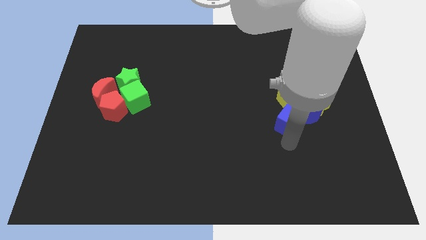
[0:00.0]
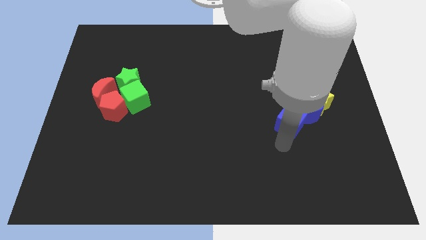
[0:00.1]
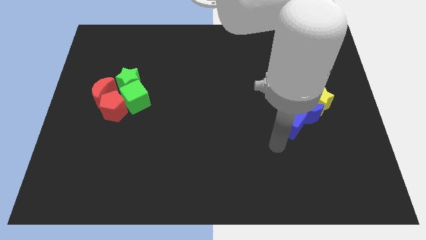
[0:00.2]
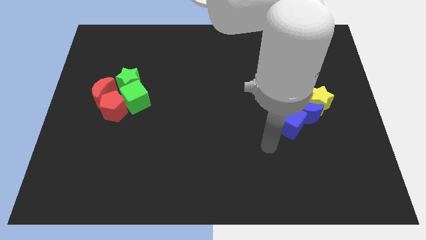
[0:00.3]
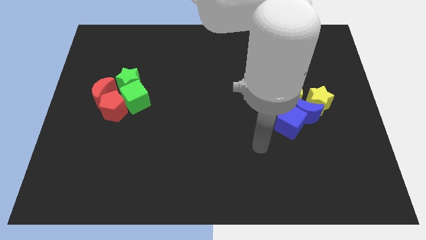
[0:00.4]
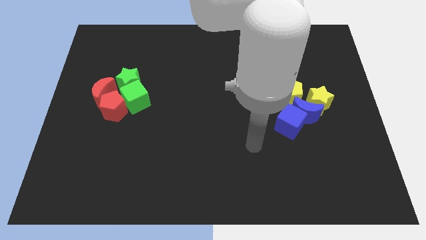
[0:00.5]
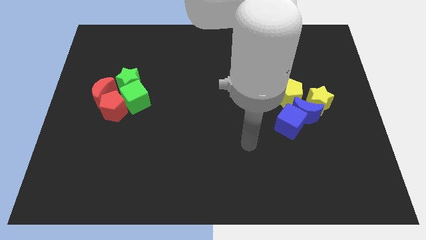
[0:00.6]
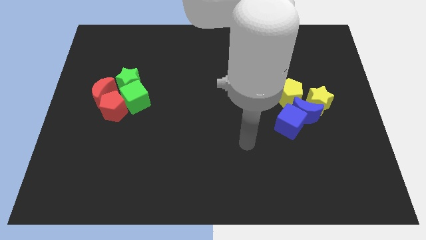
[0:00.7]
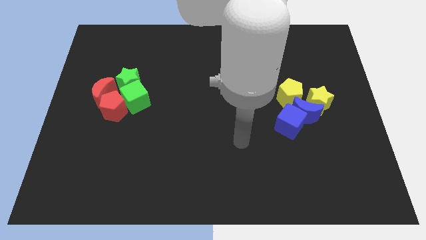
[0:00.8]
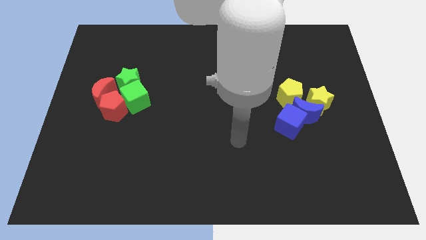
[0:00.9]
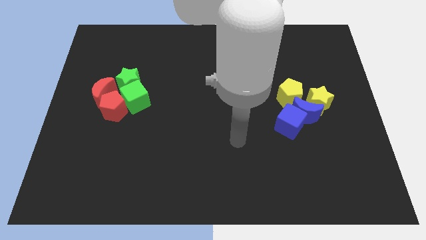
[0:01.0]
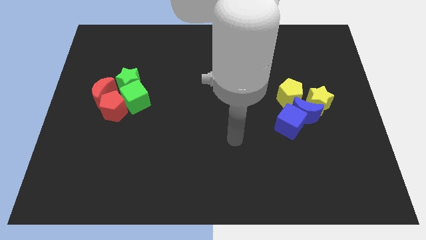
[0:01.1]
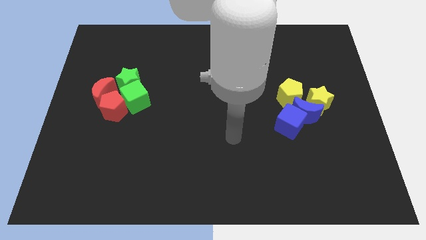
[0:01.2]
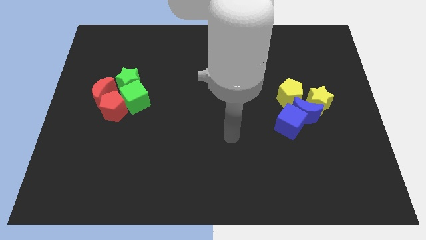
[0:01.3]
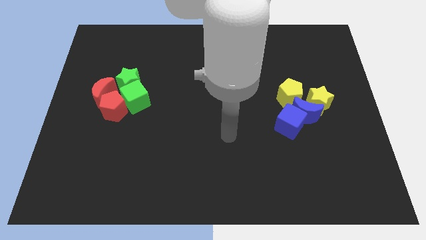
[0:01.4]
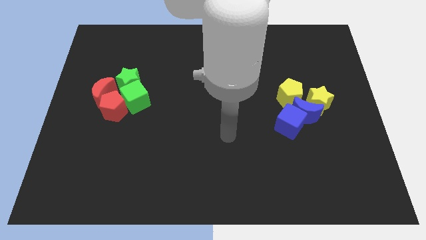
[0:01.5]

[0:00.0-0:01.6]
move your arm away from the blue blocks

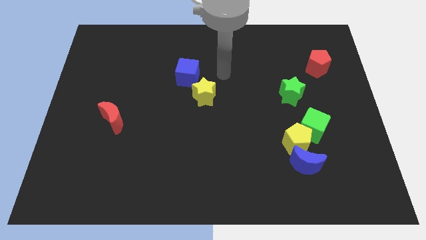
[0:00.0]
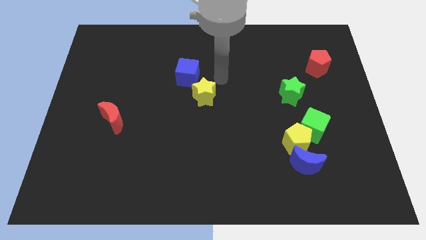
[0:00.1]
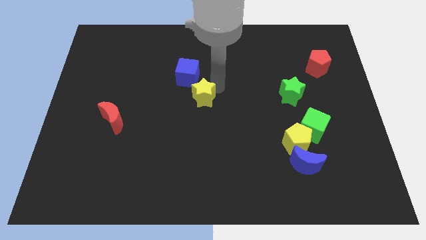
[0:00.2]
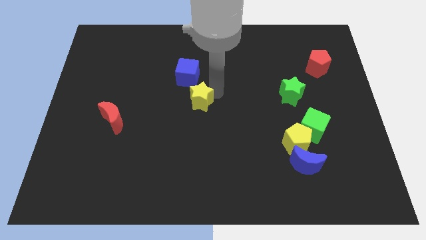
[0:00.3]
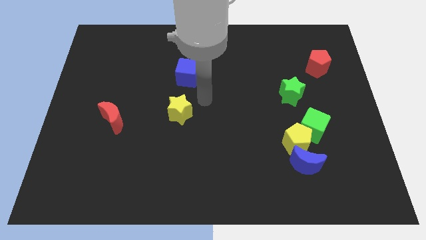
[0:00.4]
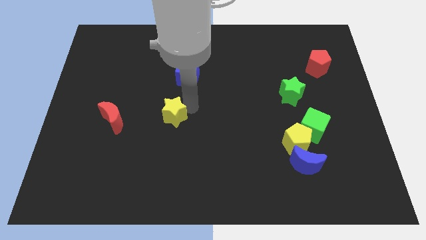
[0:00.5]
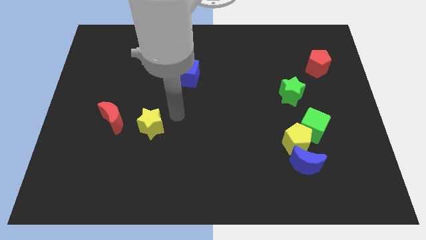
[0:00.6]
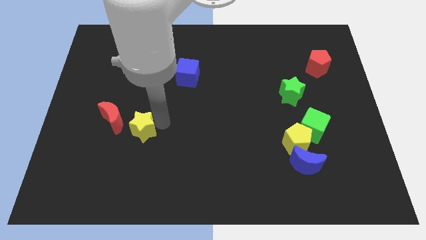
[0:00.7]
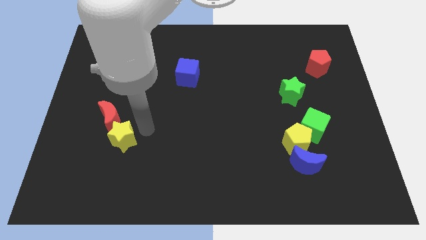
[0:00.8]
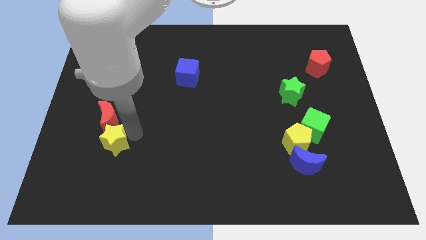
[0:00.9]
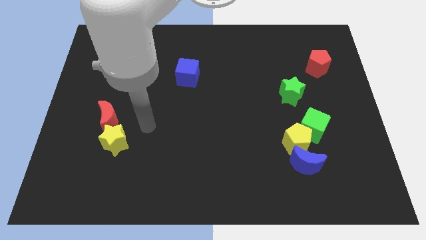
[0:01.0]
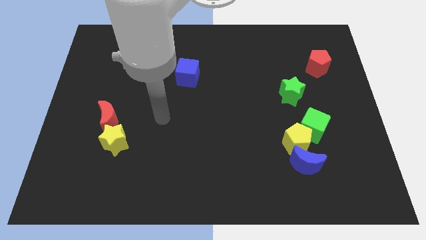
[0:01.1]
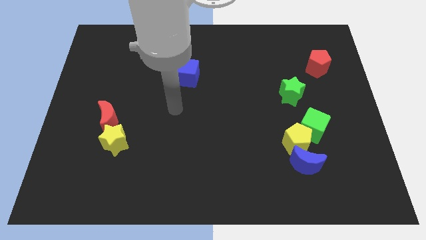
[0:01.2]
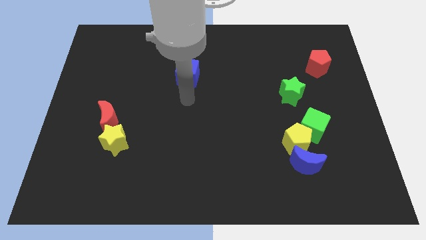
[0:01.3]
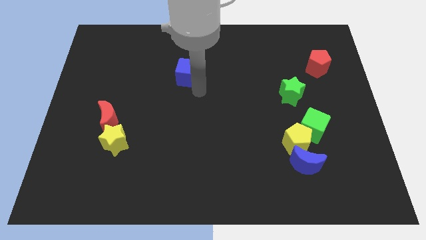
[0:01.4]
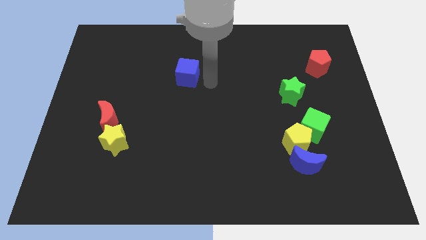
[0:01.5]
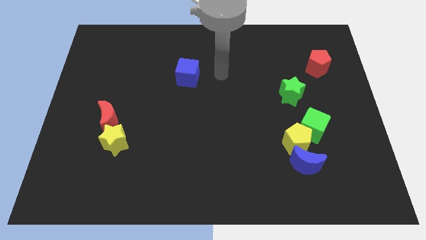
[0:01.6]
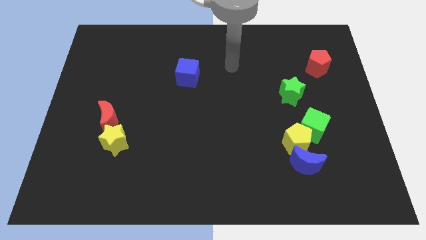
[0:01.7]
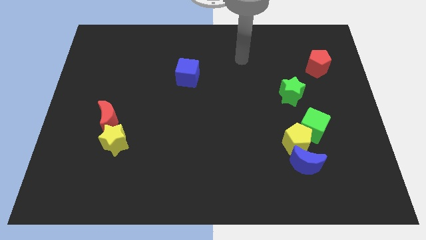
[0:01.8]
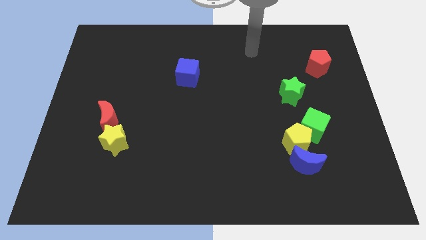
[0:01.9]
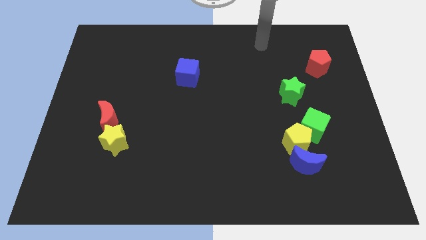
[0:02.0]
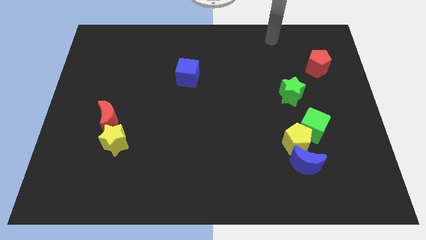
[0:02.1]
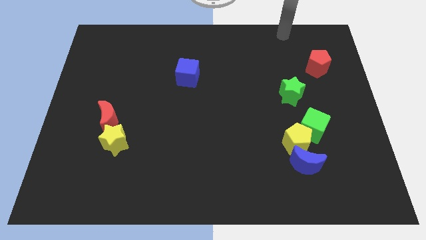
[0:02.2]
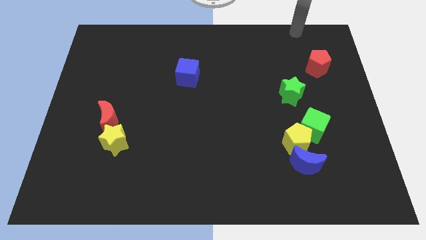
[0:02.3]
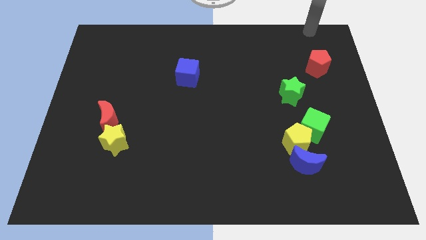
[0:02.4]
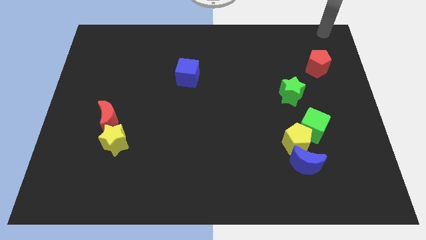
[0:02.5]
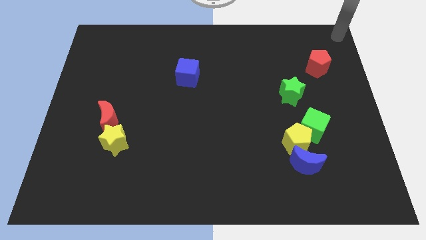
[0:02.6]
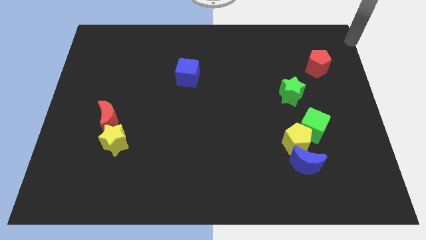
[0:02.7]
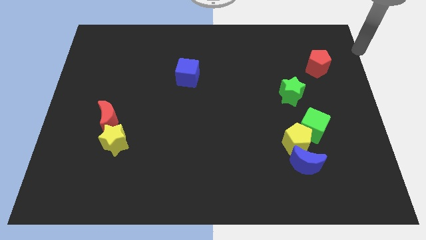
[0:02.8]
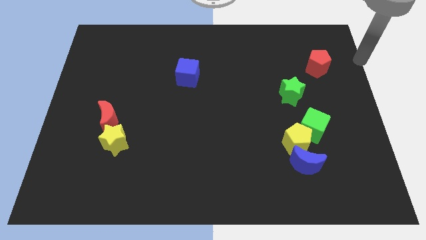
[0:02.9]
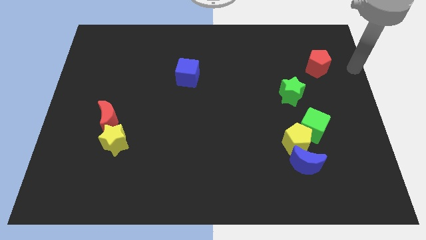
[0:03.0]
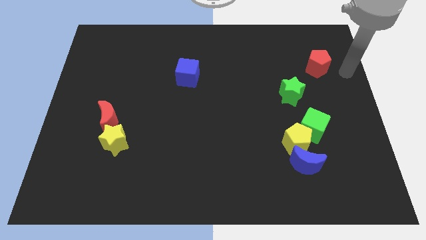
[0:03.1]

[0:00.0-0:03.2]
move the yellow star into the red moon

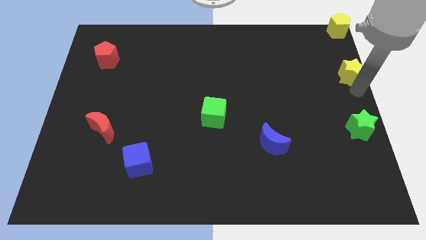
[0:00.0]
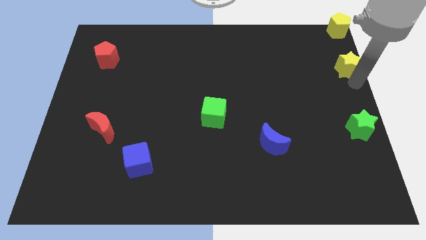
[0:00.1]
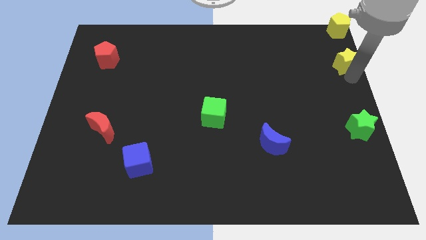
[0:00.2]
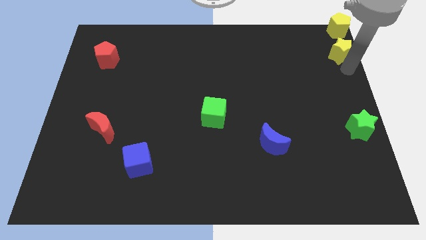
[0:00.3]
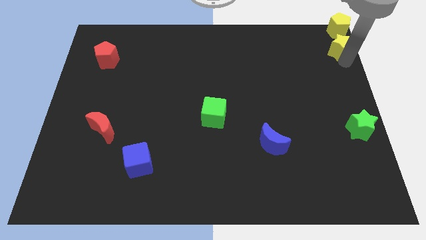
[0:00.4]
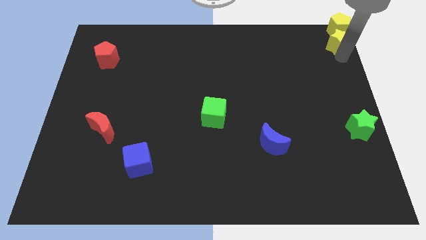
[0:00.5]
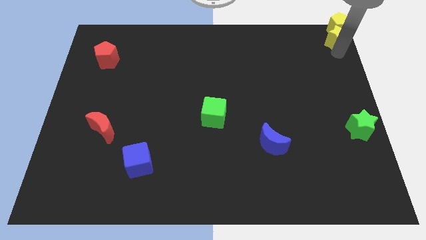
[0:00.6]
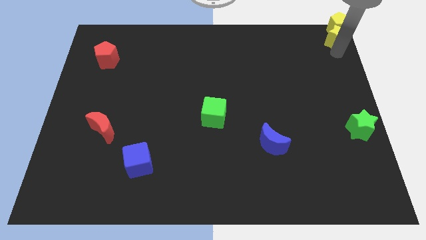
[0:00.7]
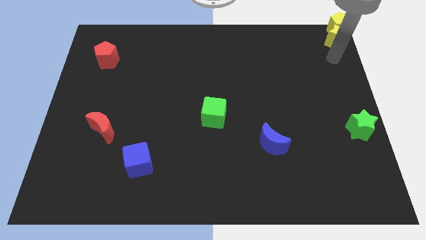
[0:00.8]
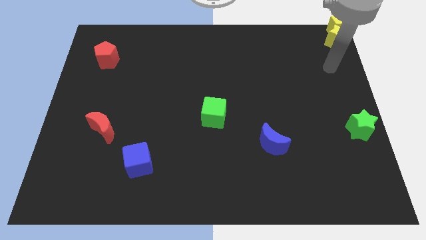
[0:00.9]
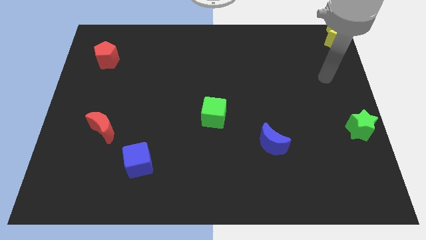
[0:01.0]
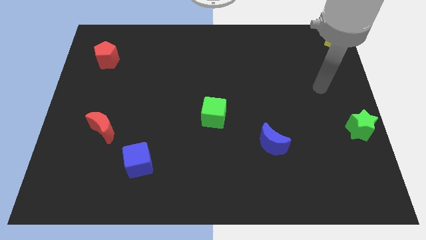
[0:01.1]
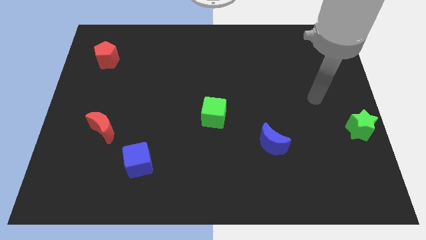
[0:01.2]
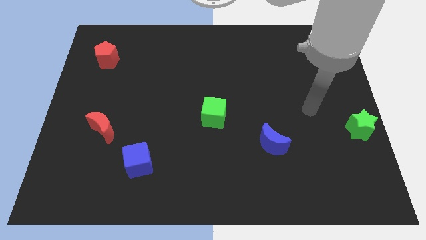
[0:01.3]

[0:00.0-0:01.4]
push the yellow star into yellow pentagon

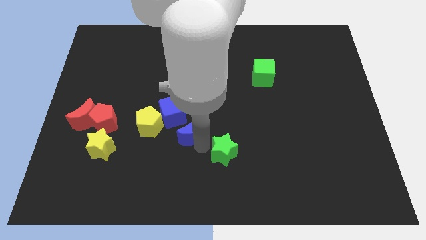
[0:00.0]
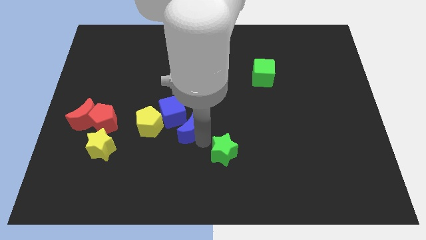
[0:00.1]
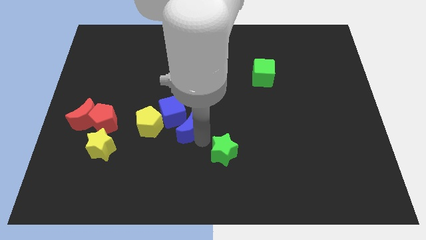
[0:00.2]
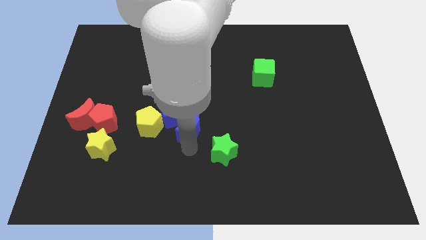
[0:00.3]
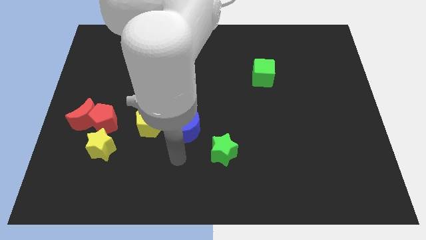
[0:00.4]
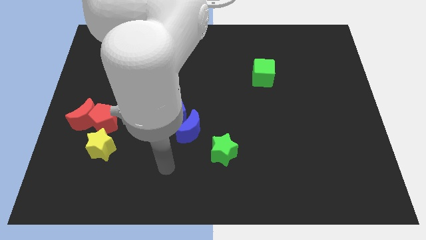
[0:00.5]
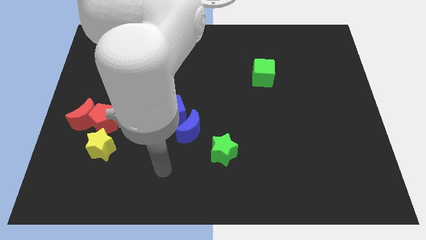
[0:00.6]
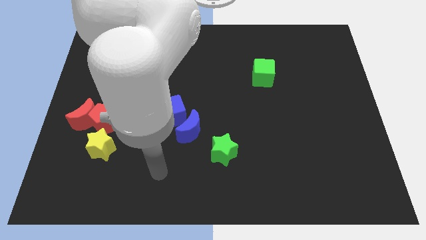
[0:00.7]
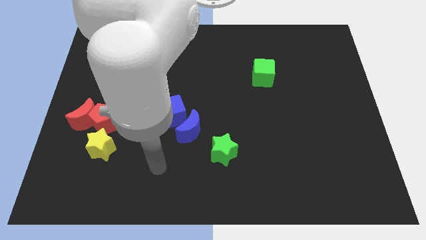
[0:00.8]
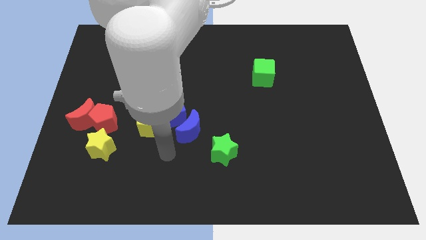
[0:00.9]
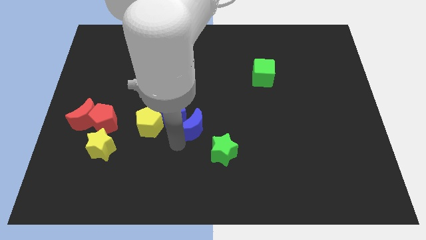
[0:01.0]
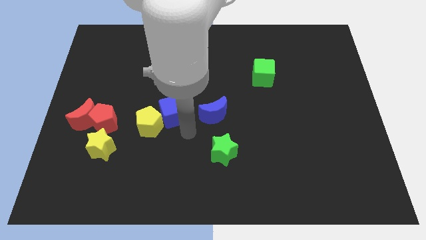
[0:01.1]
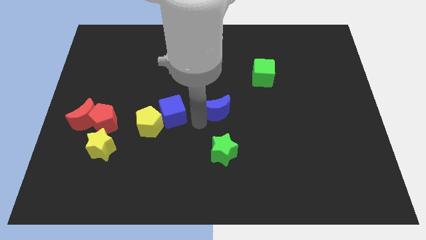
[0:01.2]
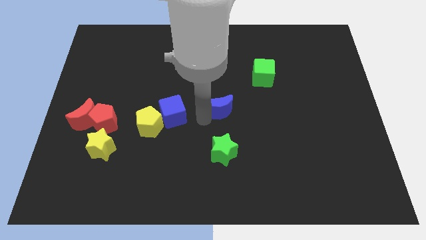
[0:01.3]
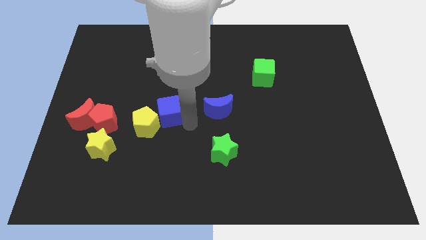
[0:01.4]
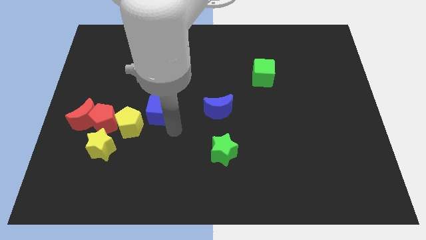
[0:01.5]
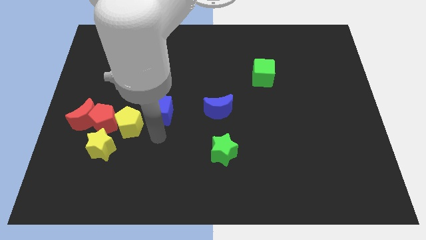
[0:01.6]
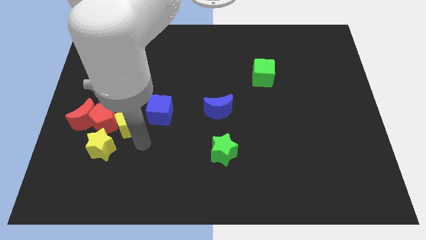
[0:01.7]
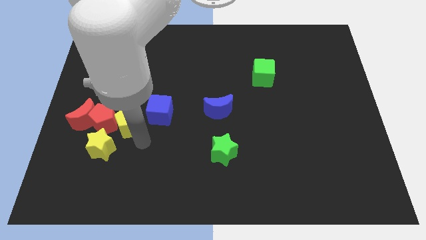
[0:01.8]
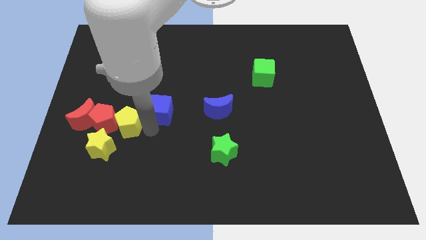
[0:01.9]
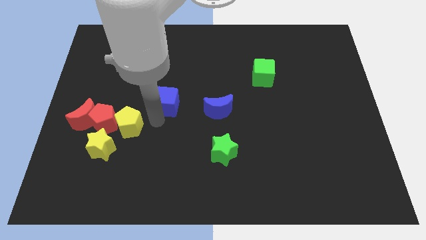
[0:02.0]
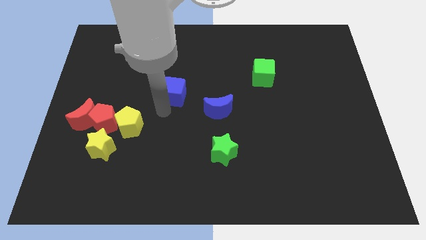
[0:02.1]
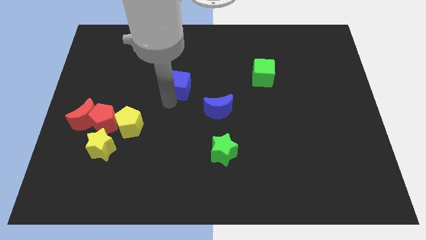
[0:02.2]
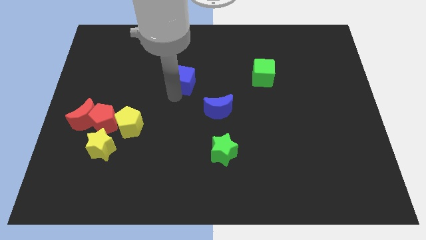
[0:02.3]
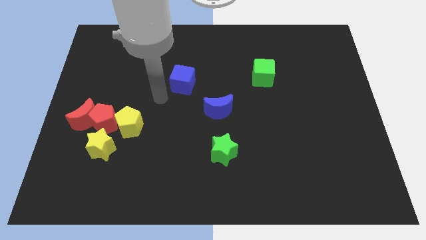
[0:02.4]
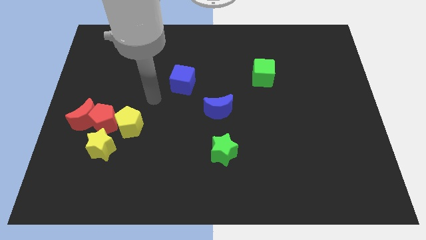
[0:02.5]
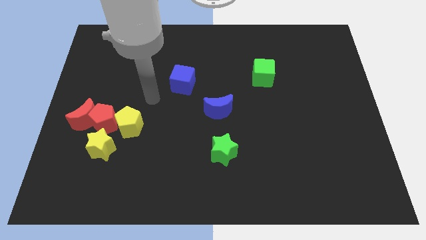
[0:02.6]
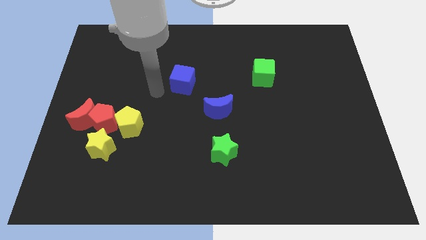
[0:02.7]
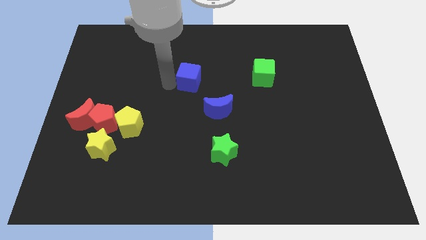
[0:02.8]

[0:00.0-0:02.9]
move blue cube to the center blue moon to right and yellow pentagon to left
